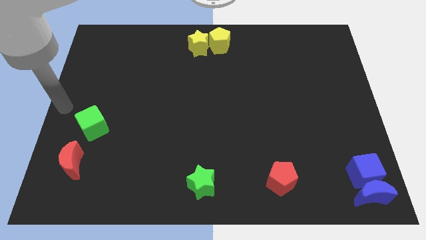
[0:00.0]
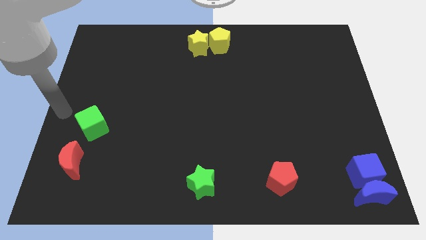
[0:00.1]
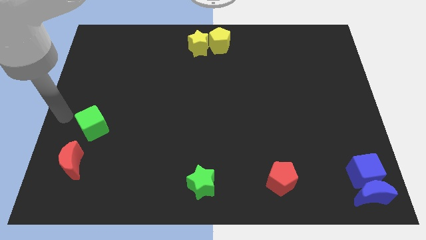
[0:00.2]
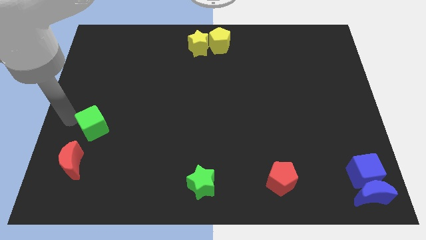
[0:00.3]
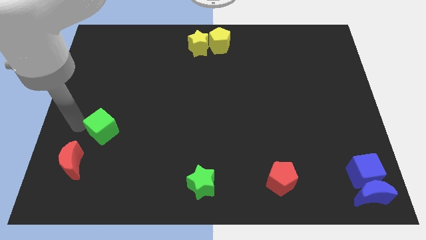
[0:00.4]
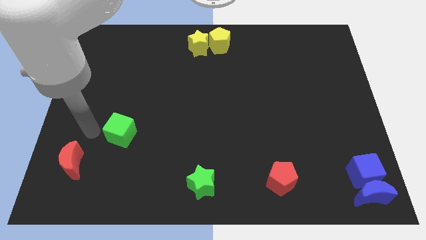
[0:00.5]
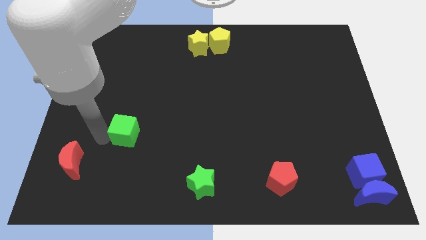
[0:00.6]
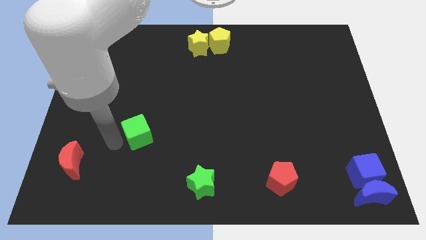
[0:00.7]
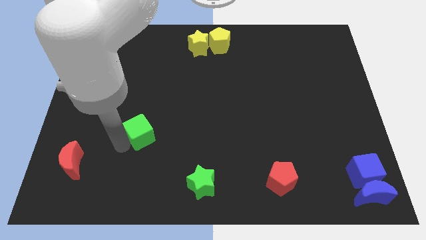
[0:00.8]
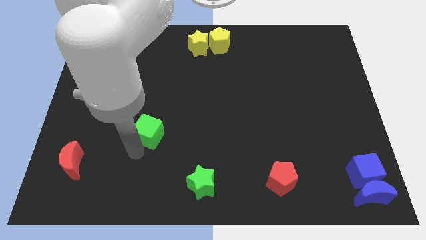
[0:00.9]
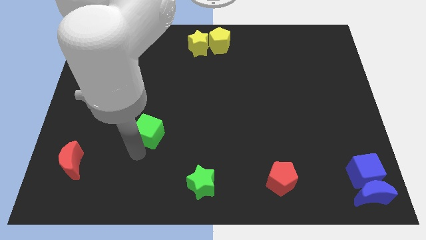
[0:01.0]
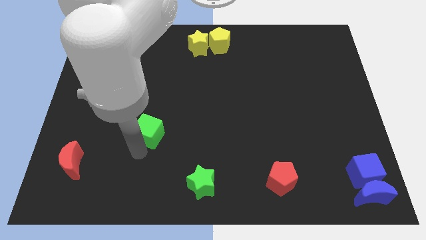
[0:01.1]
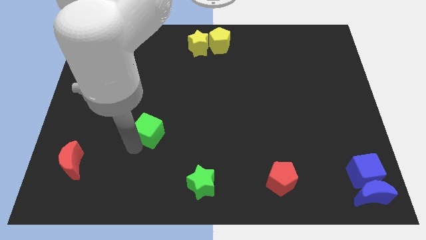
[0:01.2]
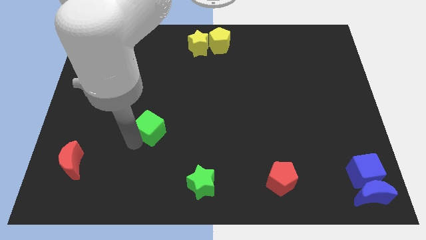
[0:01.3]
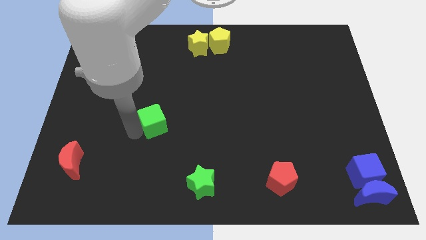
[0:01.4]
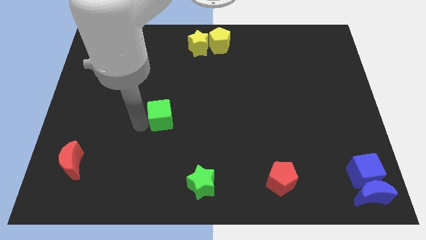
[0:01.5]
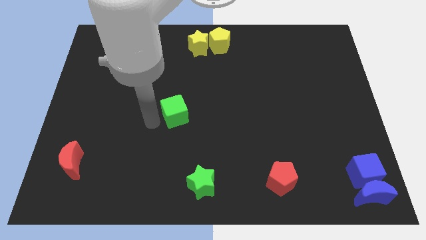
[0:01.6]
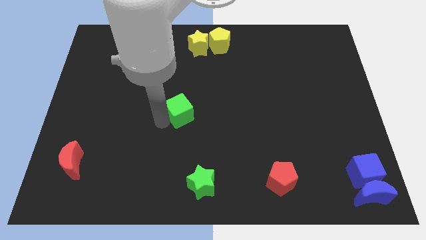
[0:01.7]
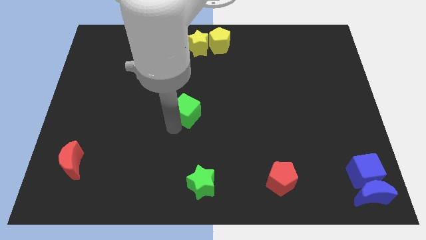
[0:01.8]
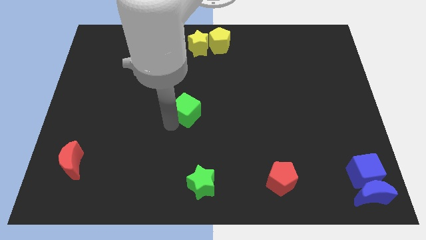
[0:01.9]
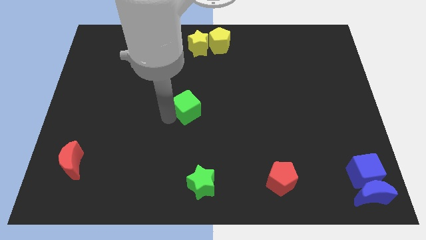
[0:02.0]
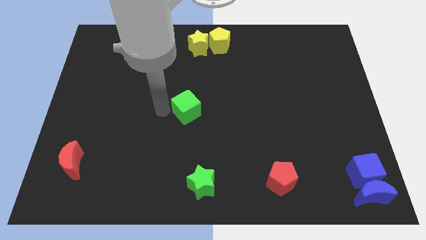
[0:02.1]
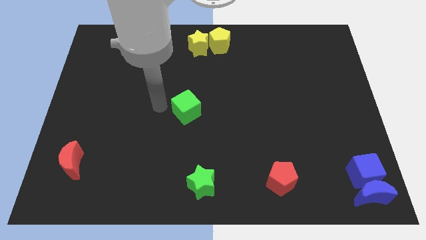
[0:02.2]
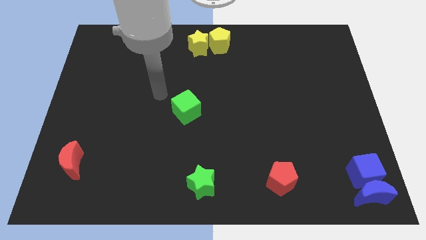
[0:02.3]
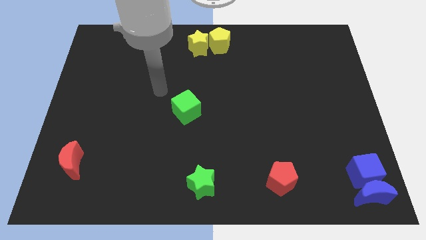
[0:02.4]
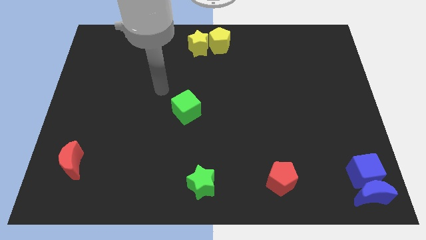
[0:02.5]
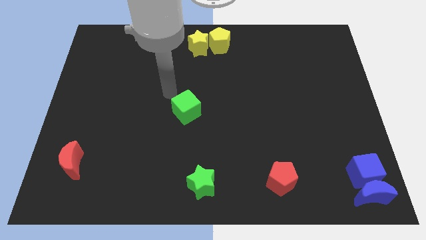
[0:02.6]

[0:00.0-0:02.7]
push the green cube towards the center of the board

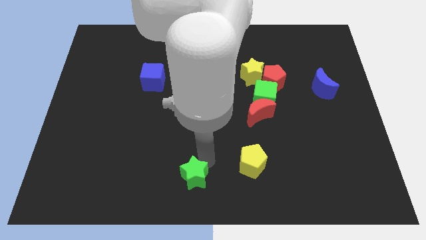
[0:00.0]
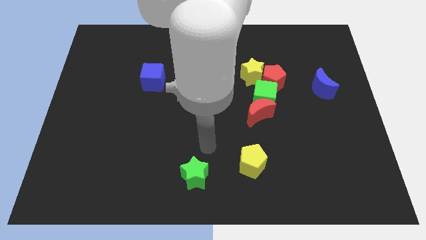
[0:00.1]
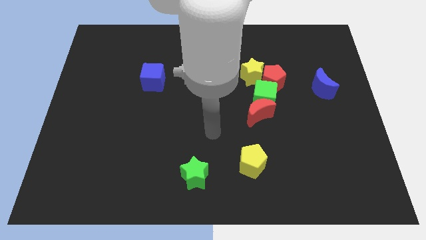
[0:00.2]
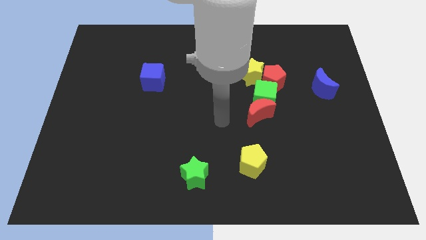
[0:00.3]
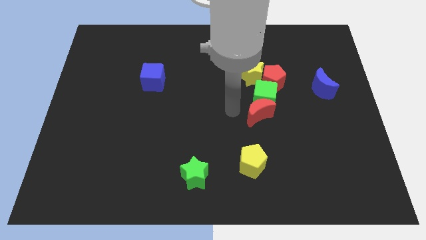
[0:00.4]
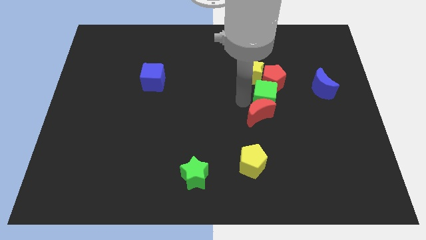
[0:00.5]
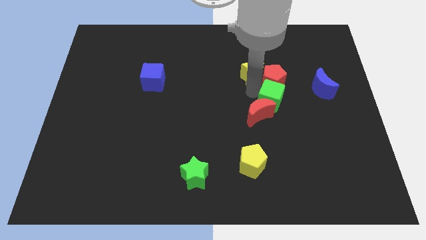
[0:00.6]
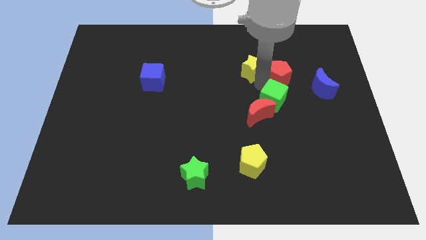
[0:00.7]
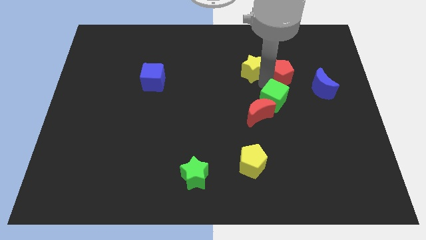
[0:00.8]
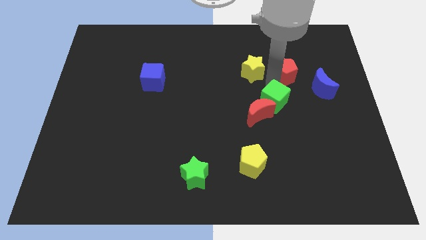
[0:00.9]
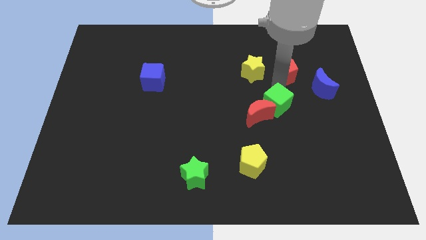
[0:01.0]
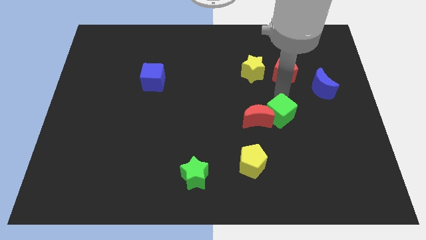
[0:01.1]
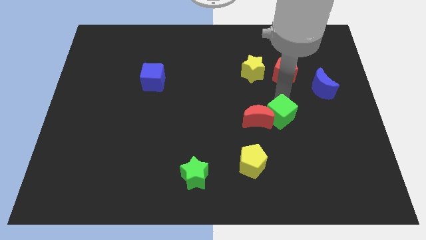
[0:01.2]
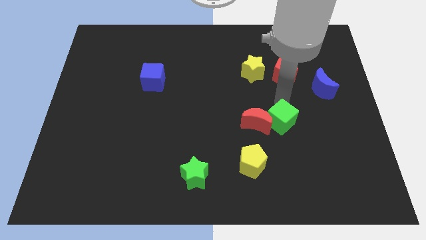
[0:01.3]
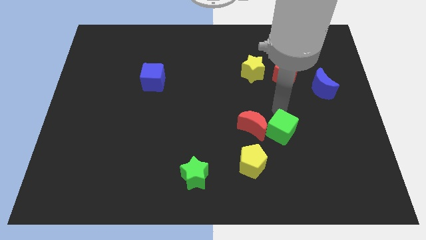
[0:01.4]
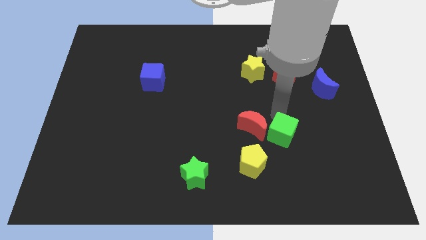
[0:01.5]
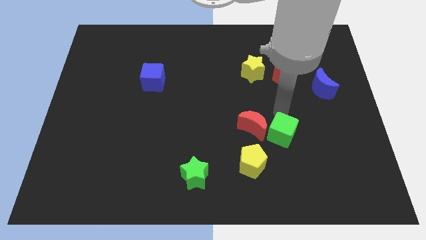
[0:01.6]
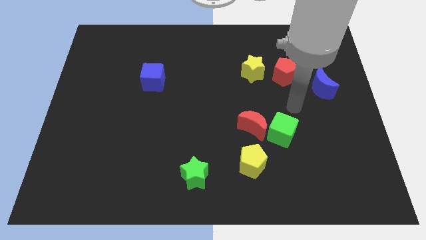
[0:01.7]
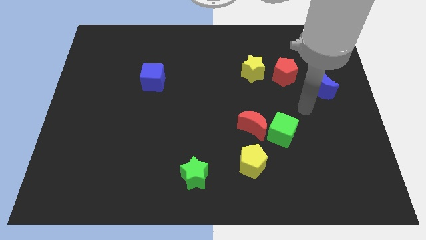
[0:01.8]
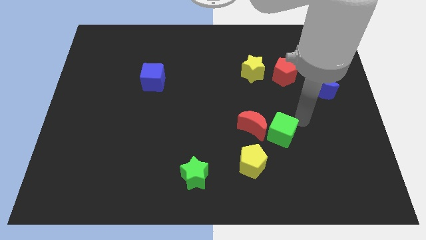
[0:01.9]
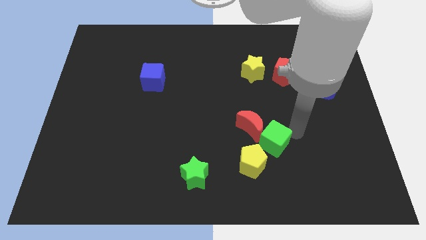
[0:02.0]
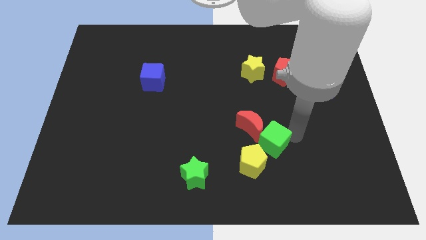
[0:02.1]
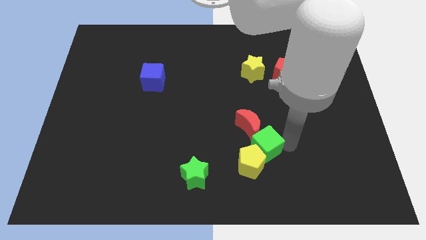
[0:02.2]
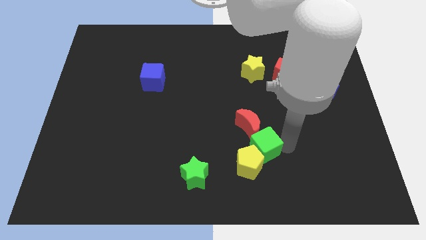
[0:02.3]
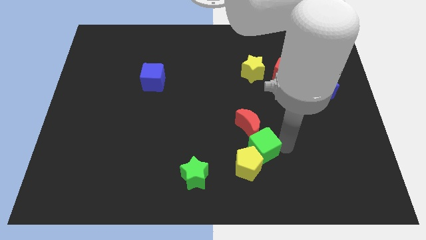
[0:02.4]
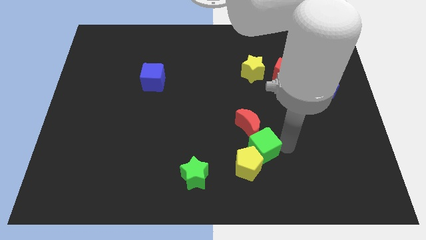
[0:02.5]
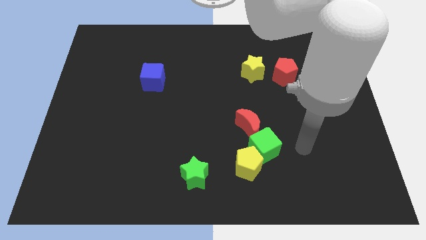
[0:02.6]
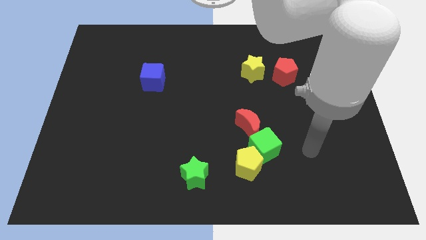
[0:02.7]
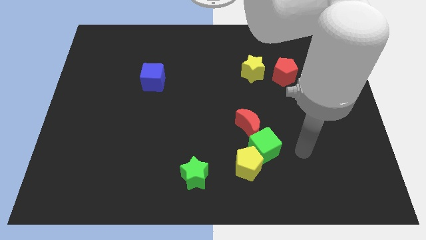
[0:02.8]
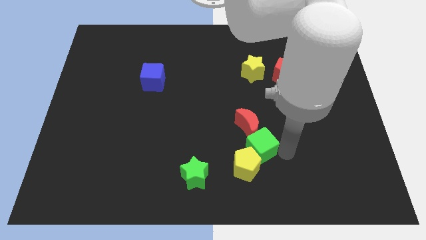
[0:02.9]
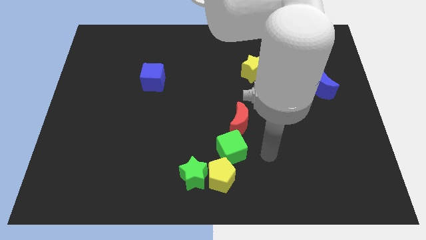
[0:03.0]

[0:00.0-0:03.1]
put the green cube in between yellow pentagon and the red moon

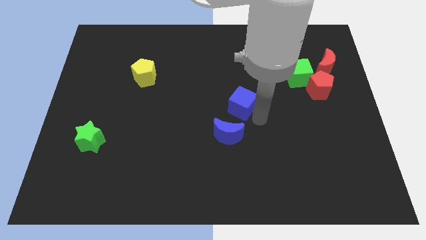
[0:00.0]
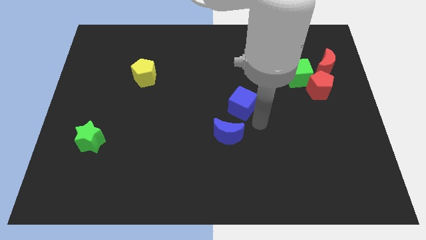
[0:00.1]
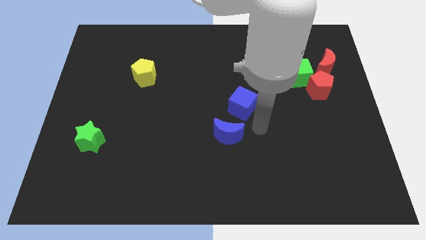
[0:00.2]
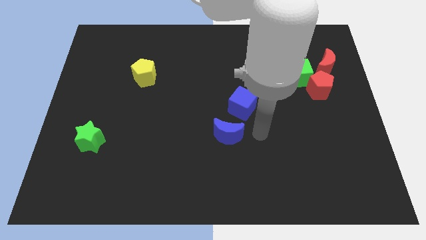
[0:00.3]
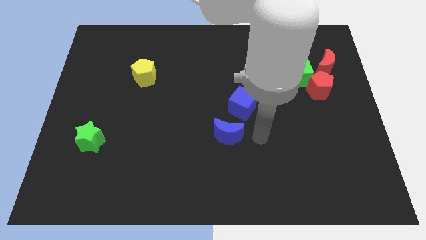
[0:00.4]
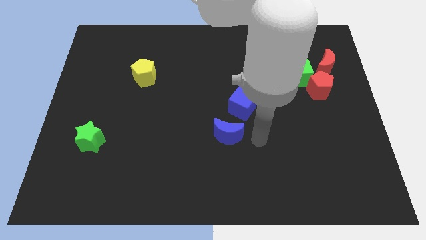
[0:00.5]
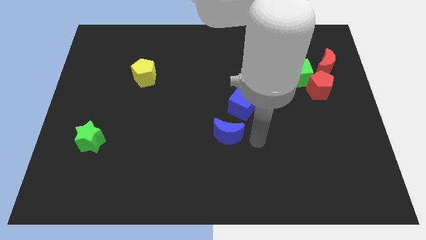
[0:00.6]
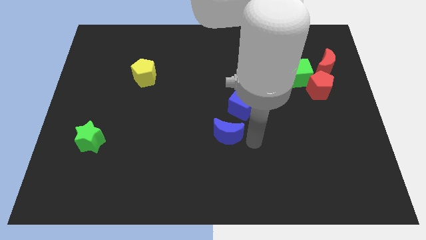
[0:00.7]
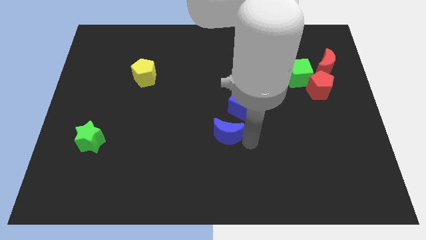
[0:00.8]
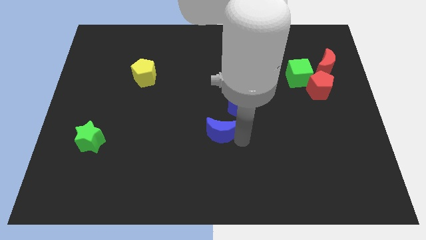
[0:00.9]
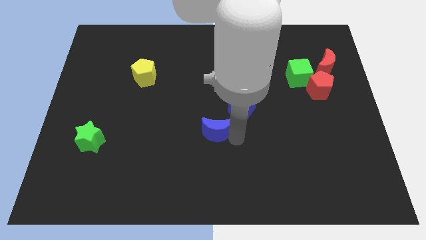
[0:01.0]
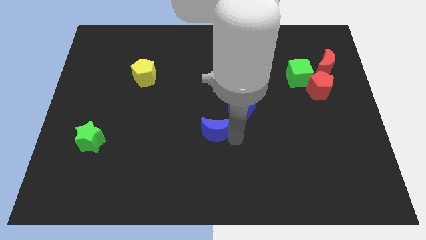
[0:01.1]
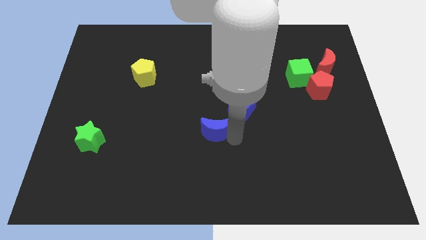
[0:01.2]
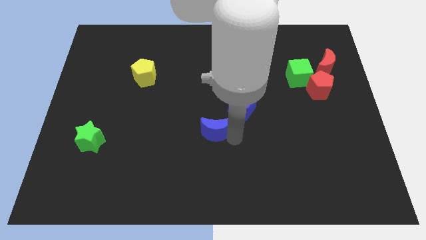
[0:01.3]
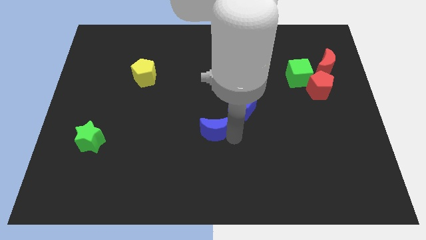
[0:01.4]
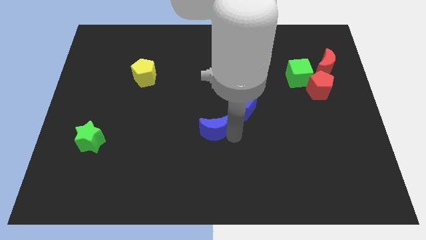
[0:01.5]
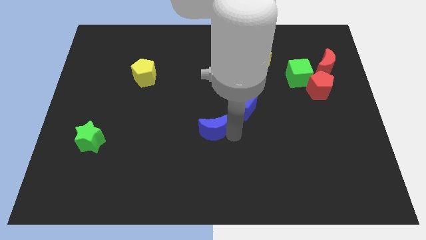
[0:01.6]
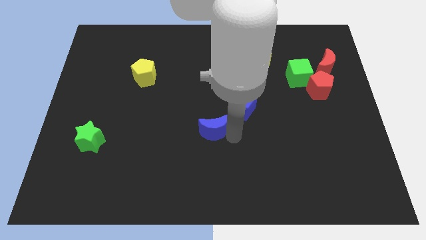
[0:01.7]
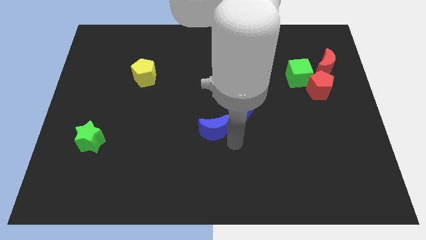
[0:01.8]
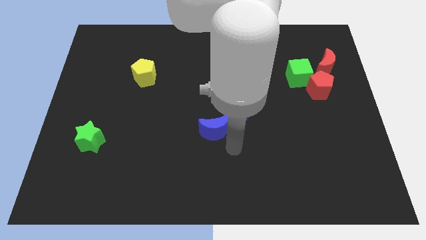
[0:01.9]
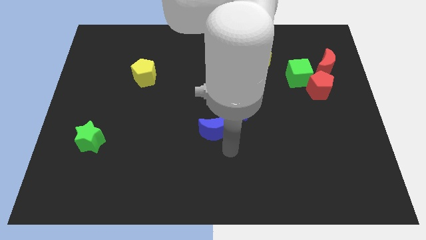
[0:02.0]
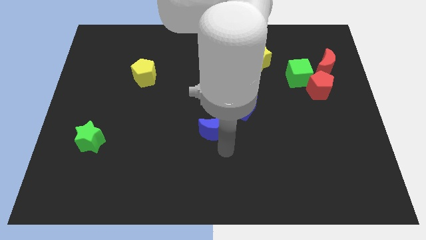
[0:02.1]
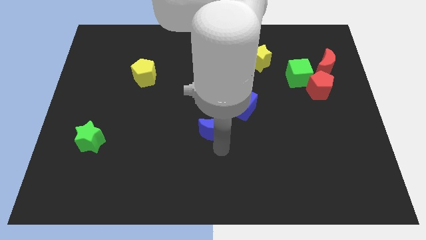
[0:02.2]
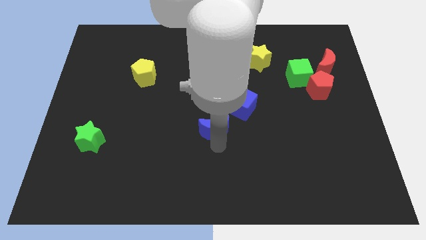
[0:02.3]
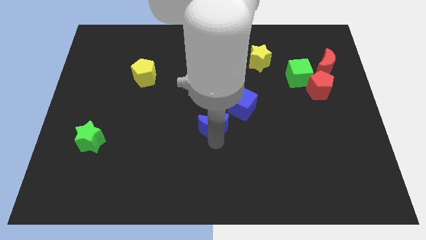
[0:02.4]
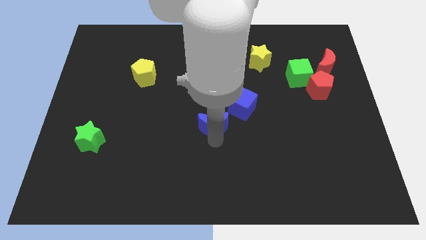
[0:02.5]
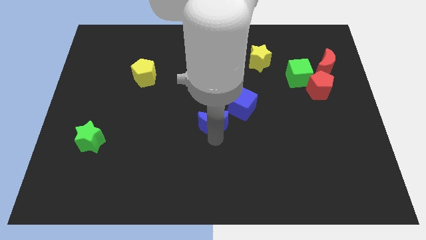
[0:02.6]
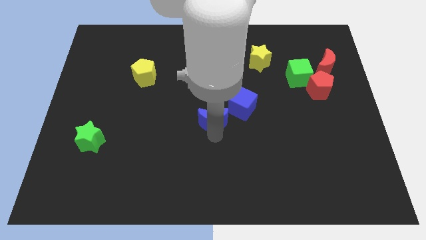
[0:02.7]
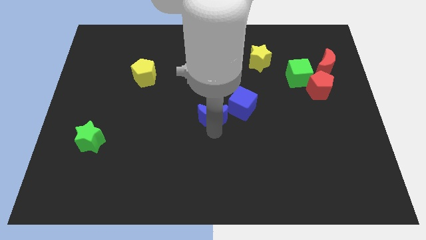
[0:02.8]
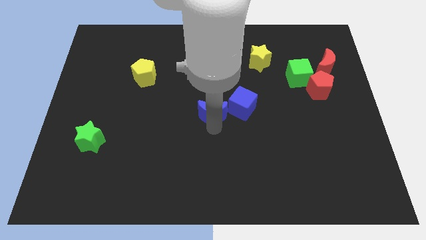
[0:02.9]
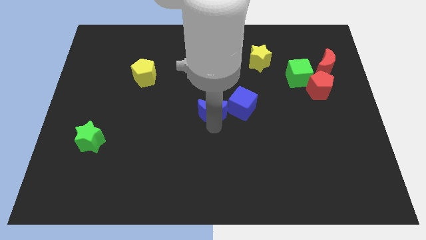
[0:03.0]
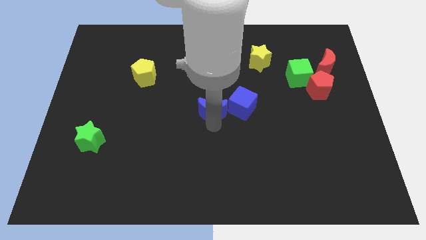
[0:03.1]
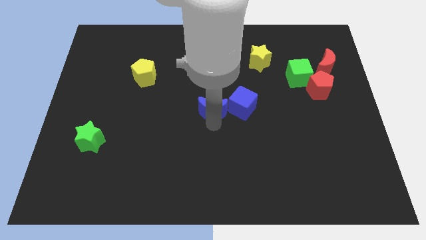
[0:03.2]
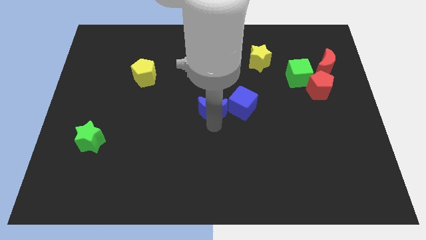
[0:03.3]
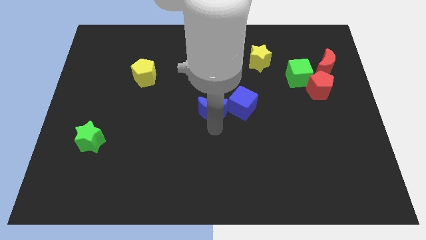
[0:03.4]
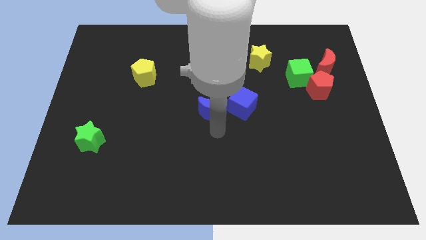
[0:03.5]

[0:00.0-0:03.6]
put the blue crescent to the left of the blue cube
